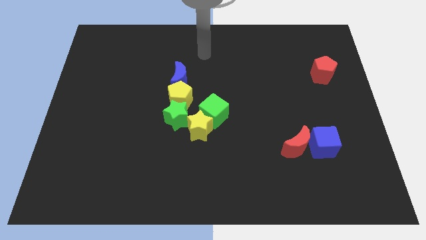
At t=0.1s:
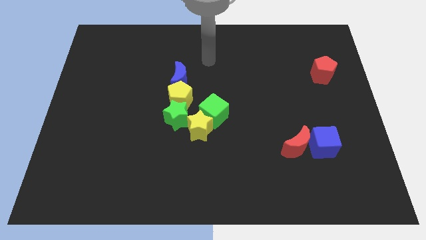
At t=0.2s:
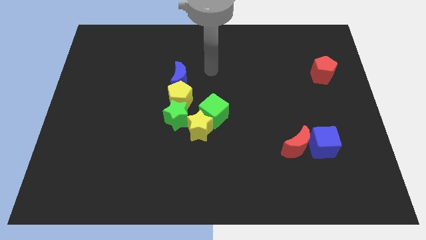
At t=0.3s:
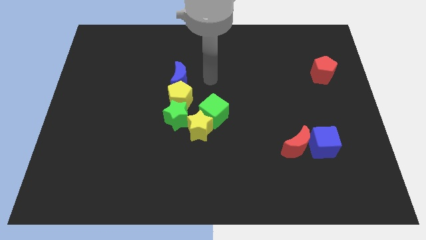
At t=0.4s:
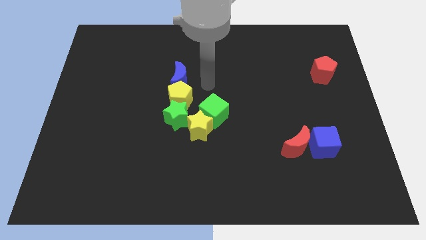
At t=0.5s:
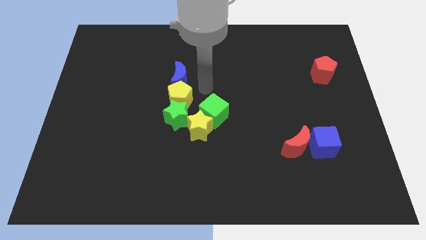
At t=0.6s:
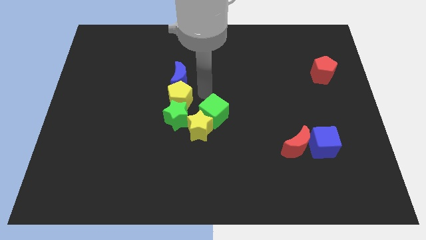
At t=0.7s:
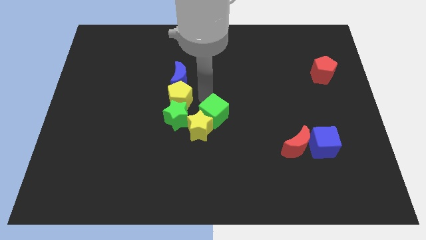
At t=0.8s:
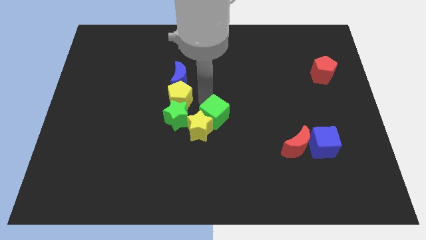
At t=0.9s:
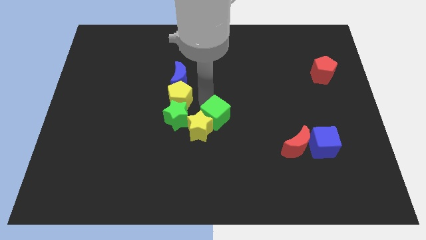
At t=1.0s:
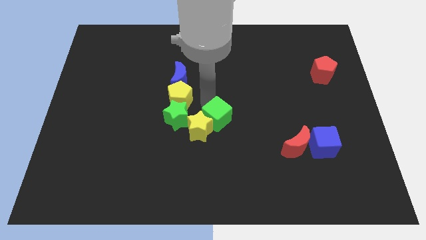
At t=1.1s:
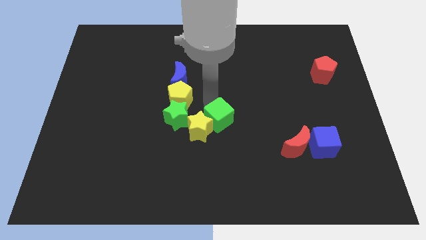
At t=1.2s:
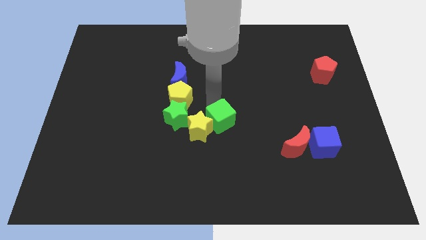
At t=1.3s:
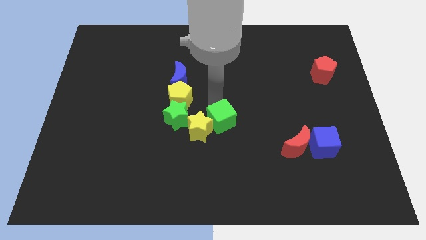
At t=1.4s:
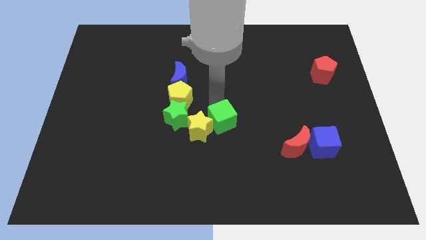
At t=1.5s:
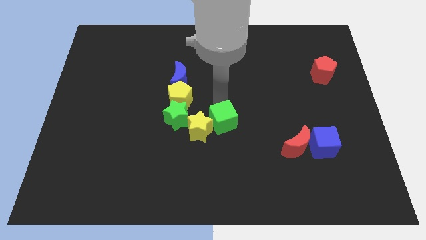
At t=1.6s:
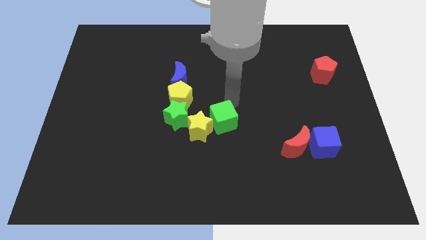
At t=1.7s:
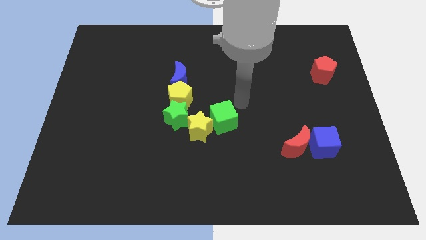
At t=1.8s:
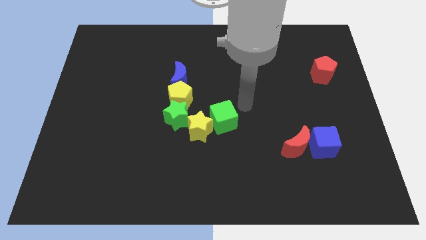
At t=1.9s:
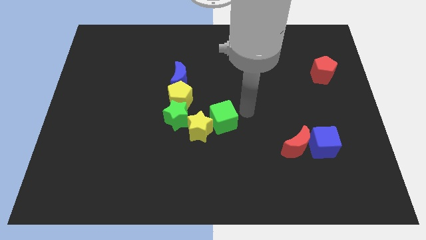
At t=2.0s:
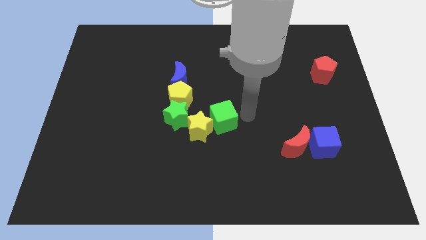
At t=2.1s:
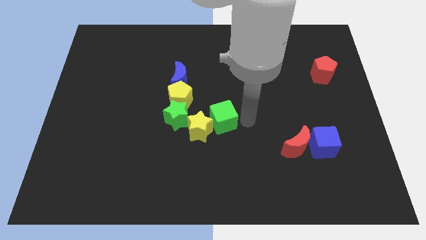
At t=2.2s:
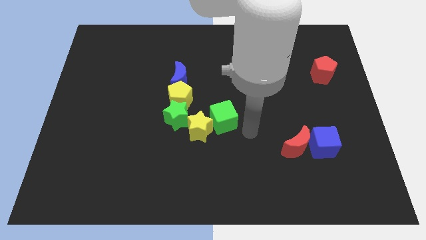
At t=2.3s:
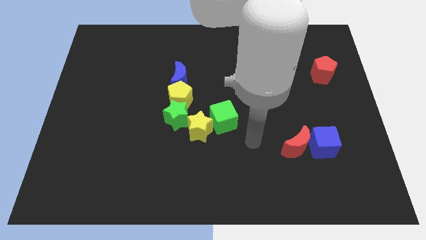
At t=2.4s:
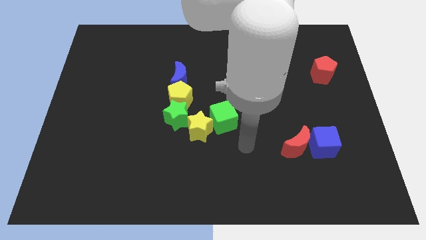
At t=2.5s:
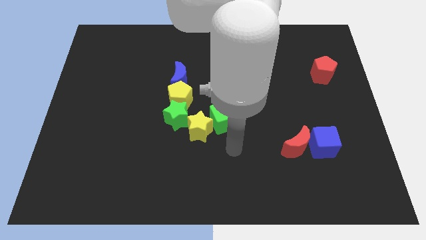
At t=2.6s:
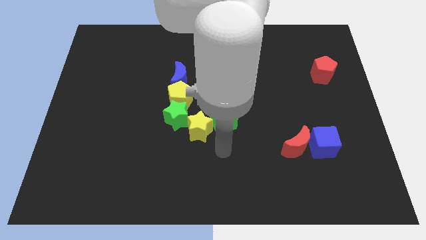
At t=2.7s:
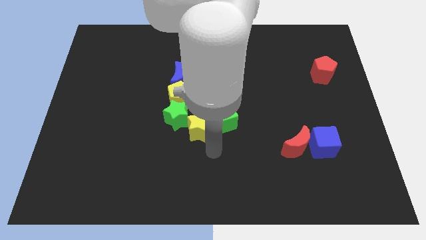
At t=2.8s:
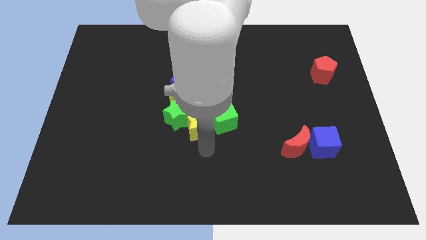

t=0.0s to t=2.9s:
move the green cube slightly down

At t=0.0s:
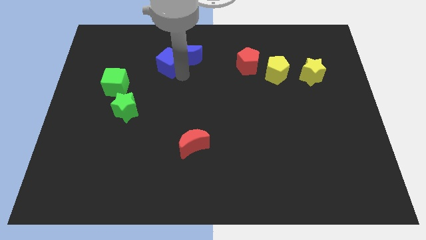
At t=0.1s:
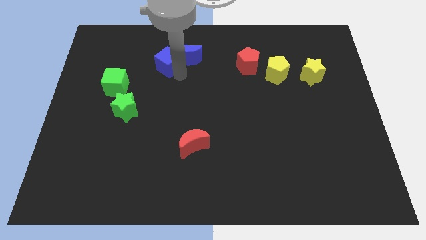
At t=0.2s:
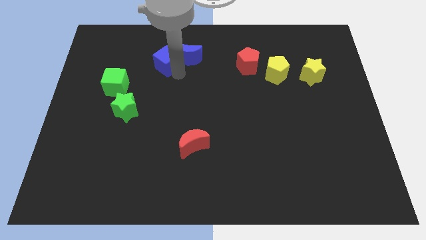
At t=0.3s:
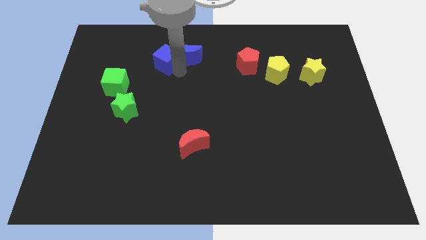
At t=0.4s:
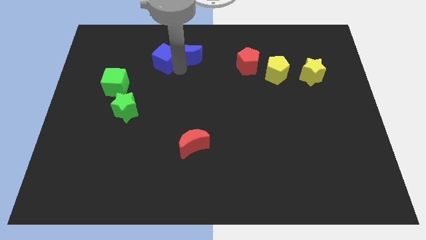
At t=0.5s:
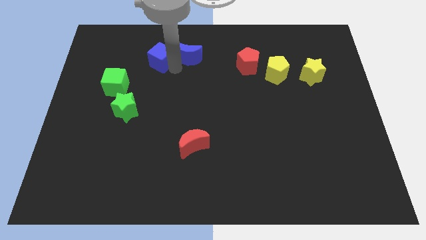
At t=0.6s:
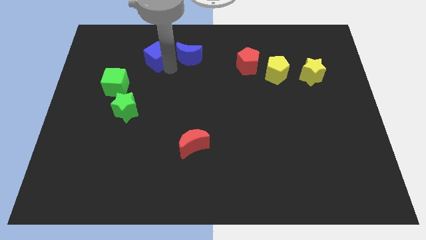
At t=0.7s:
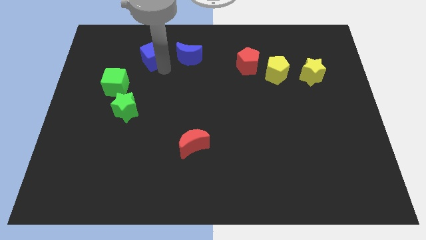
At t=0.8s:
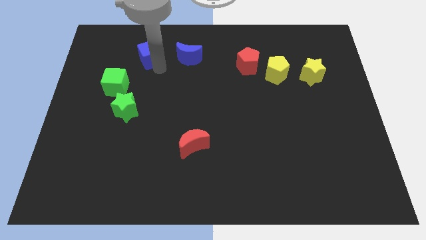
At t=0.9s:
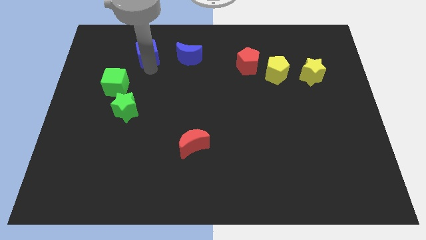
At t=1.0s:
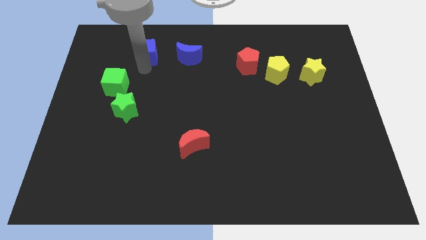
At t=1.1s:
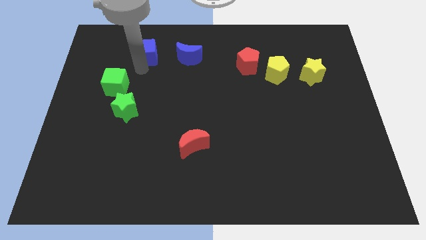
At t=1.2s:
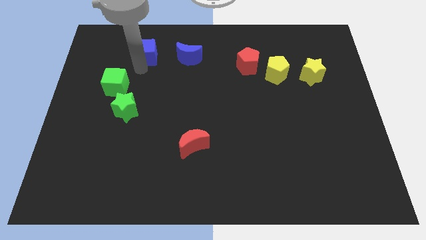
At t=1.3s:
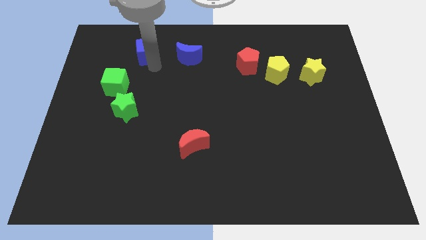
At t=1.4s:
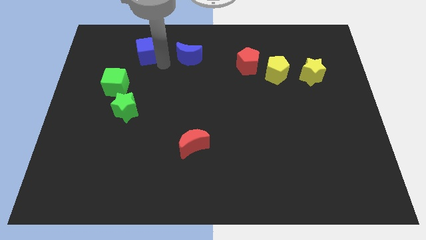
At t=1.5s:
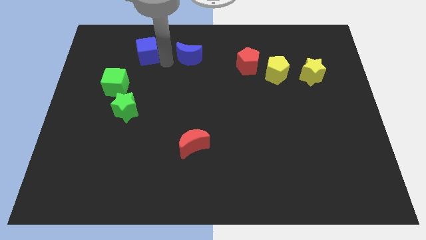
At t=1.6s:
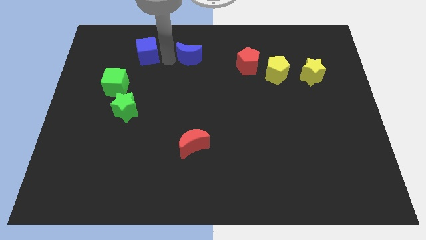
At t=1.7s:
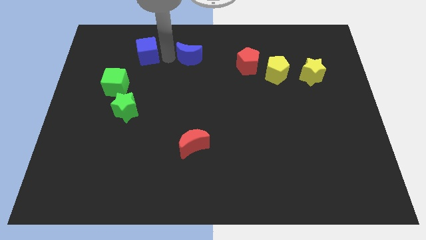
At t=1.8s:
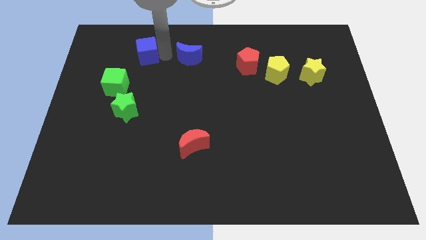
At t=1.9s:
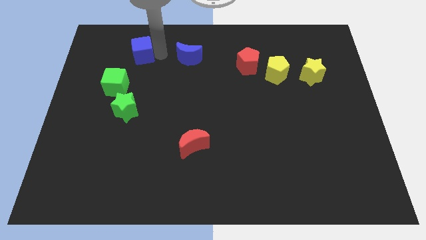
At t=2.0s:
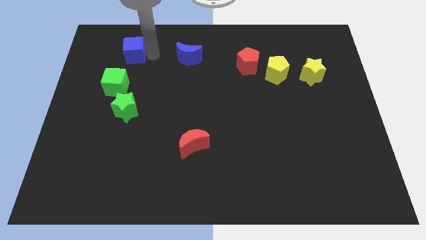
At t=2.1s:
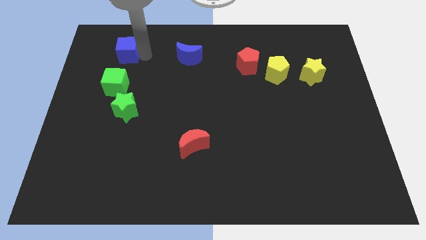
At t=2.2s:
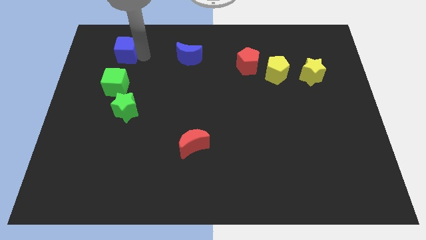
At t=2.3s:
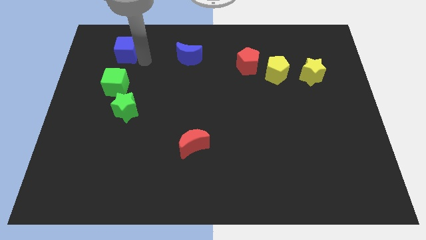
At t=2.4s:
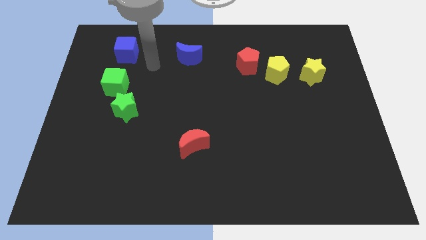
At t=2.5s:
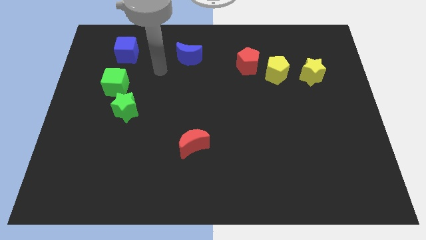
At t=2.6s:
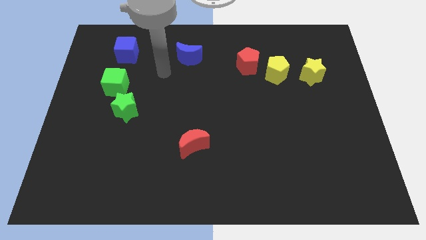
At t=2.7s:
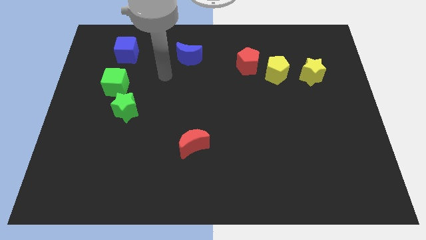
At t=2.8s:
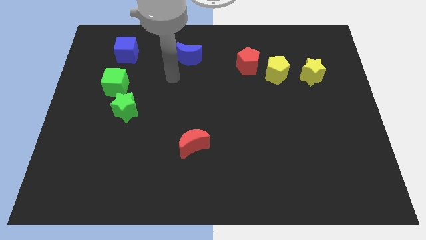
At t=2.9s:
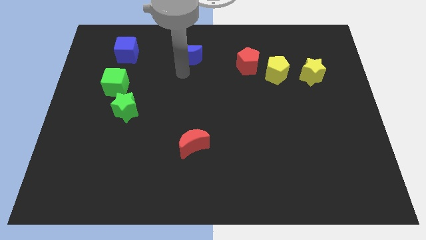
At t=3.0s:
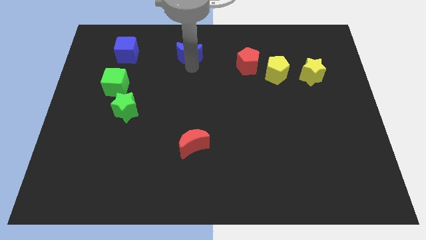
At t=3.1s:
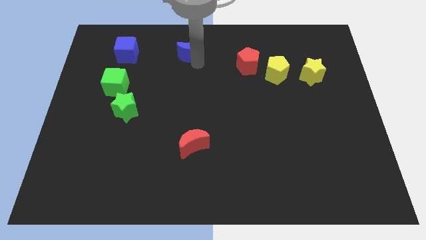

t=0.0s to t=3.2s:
separate the blue cube and blue crescent

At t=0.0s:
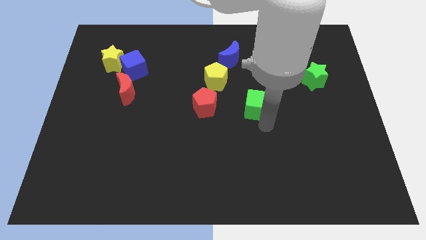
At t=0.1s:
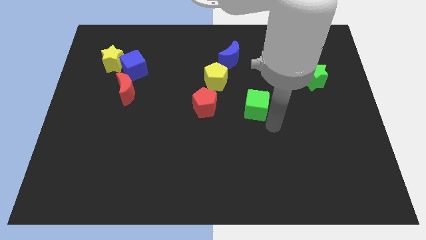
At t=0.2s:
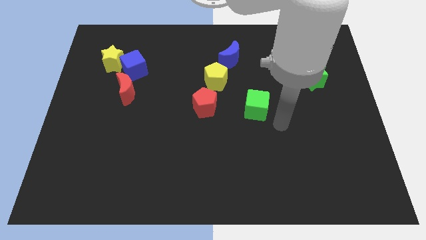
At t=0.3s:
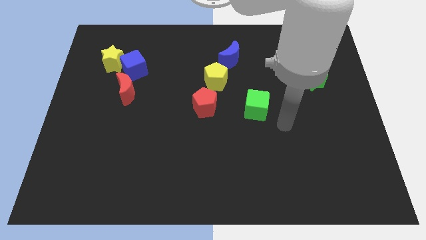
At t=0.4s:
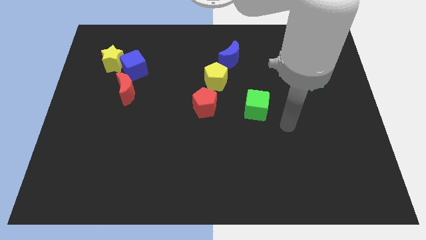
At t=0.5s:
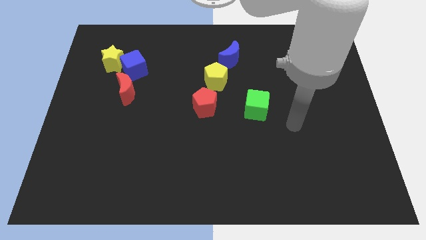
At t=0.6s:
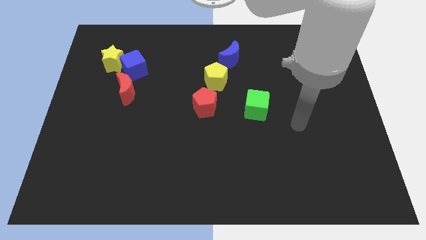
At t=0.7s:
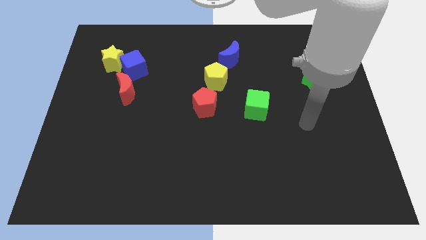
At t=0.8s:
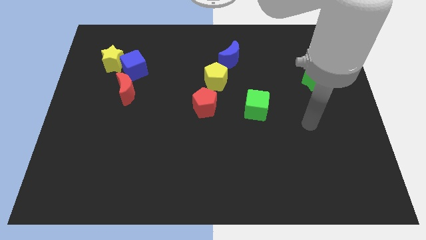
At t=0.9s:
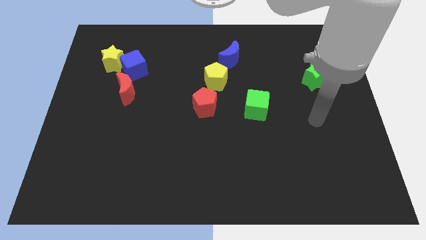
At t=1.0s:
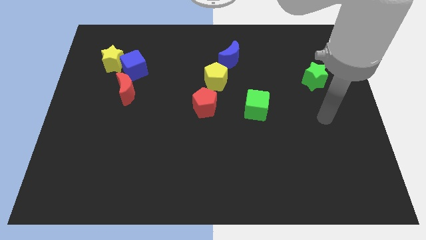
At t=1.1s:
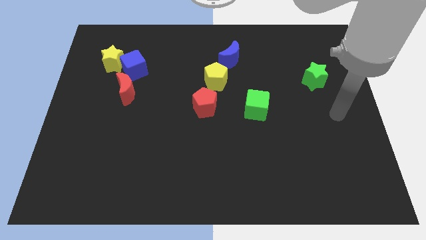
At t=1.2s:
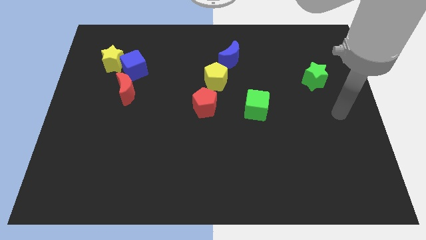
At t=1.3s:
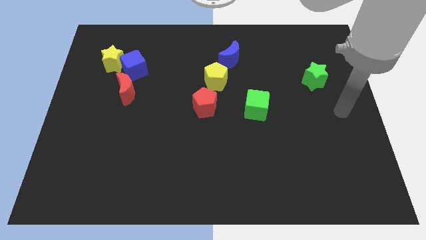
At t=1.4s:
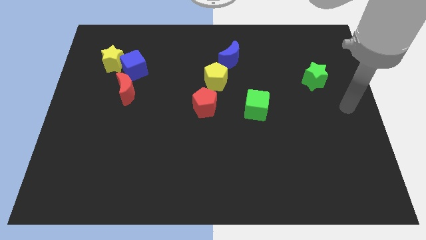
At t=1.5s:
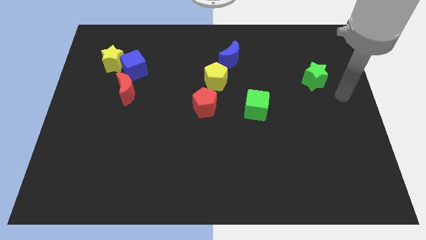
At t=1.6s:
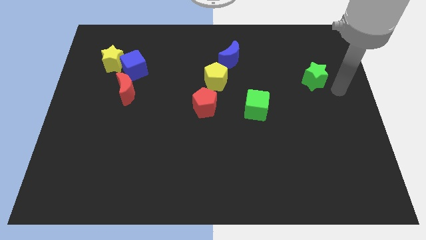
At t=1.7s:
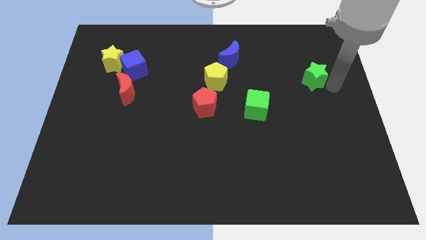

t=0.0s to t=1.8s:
move the arm right to the green star

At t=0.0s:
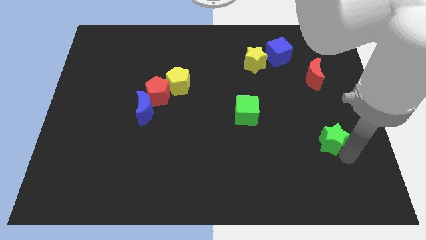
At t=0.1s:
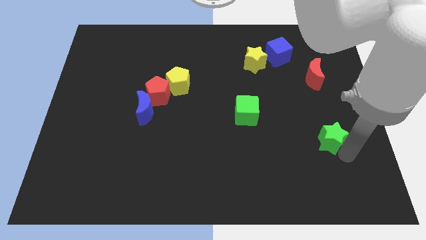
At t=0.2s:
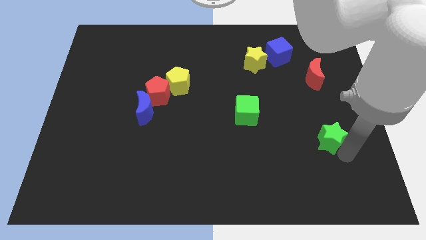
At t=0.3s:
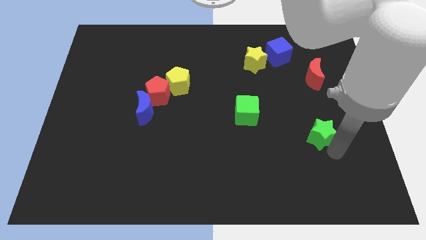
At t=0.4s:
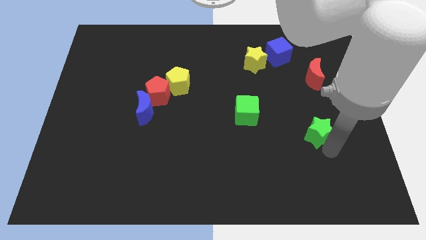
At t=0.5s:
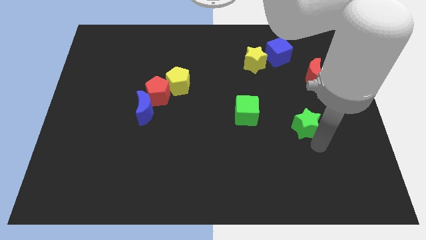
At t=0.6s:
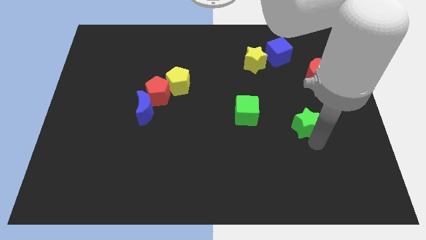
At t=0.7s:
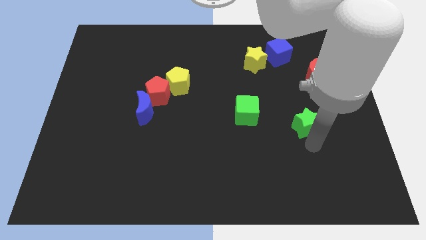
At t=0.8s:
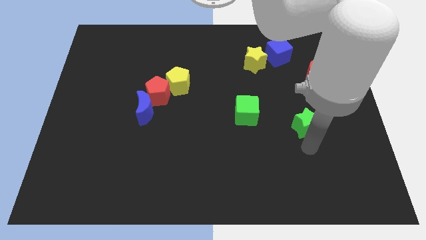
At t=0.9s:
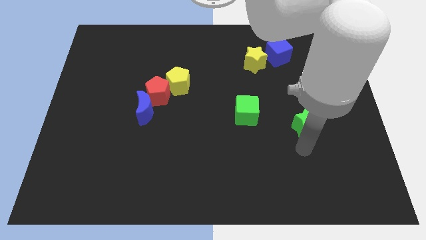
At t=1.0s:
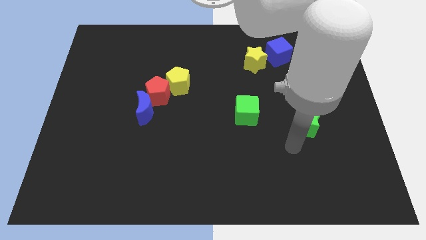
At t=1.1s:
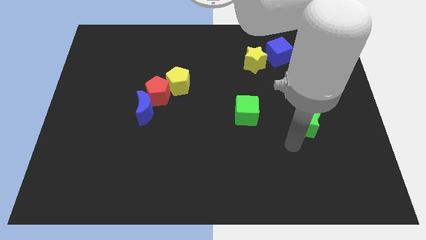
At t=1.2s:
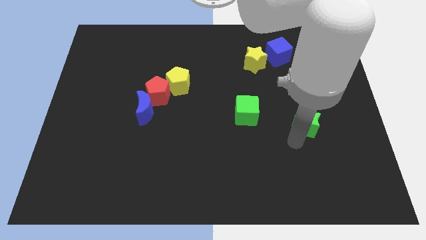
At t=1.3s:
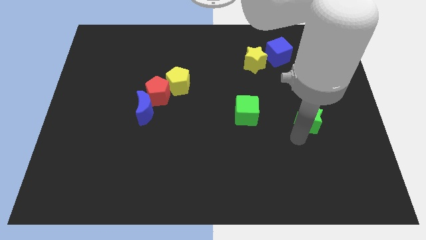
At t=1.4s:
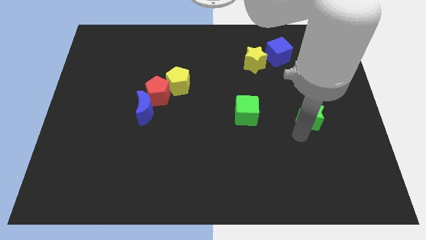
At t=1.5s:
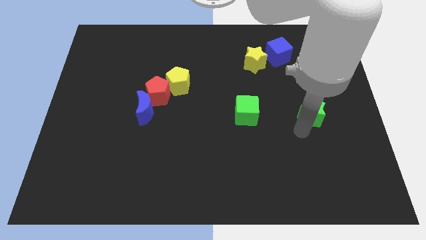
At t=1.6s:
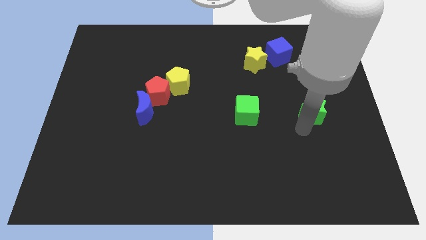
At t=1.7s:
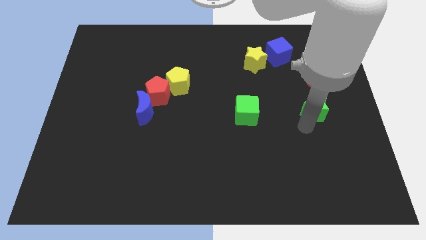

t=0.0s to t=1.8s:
push the green star to the right of the green cube
